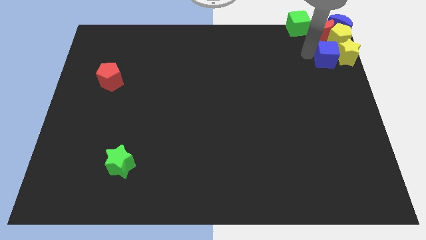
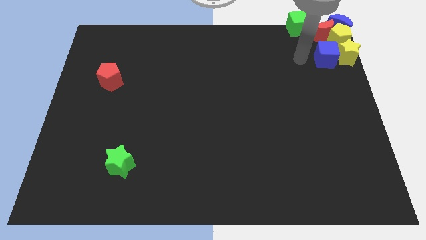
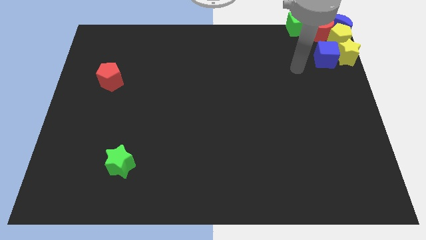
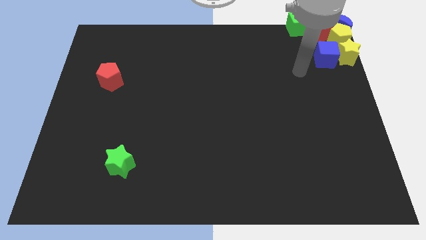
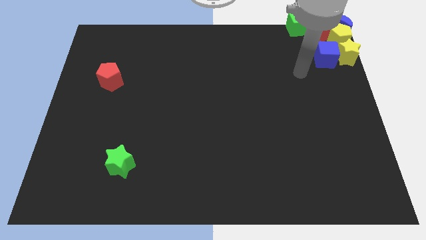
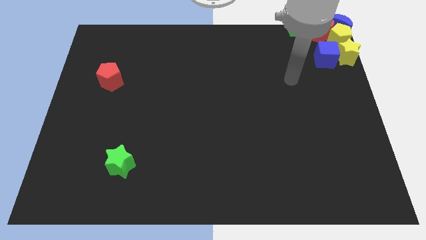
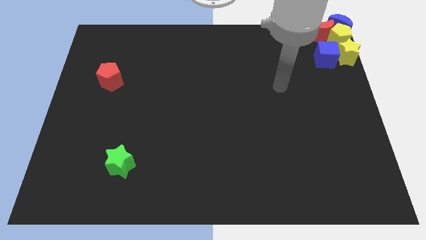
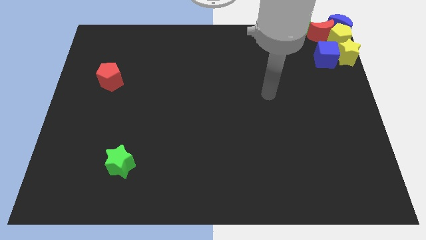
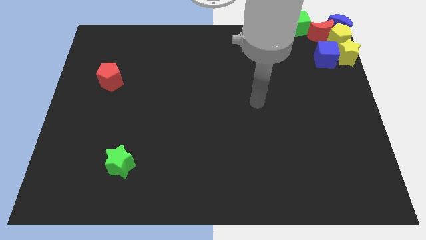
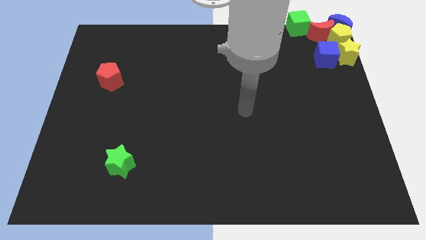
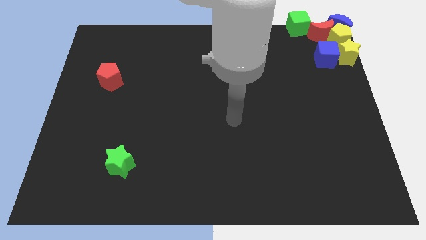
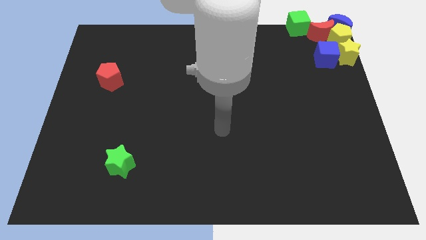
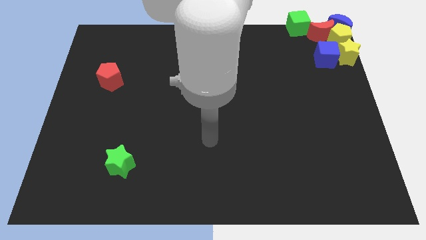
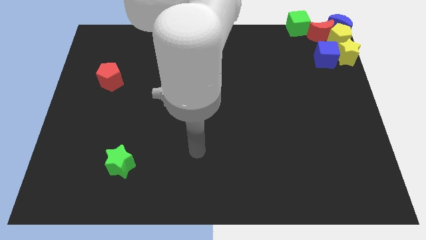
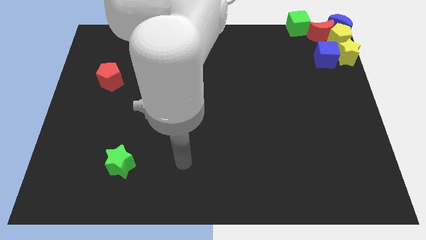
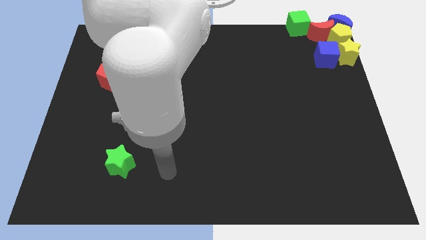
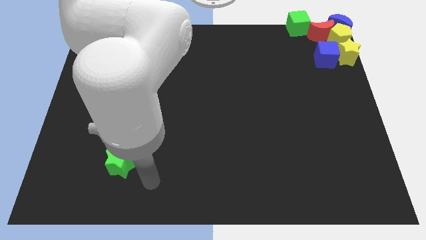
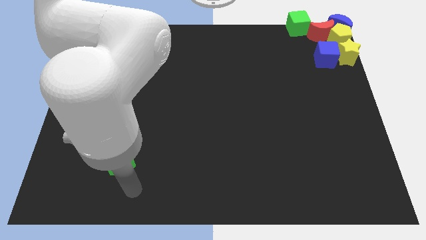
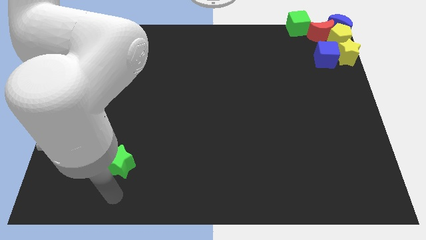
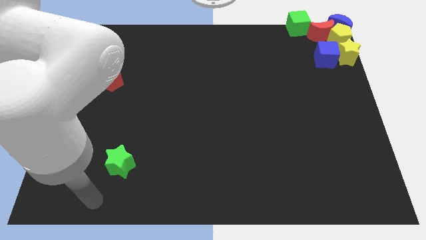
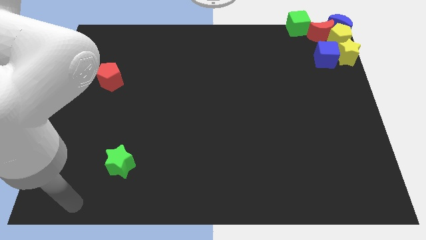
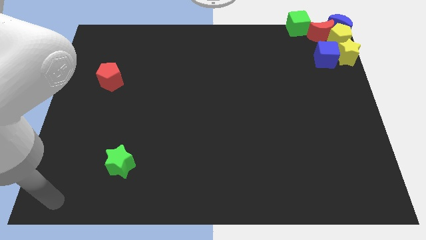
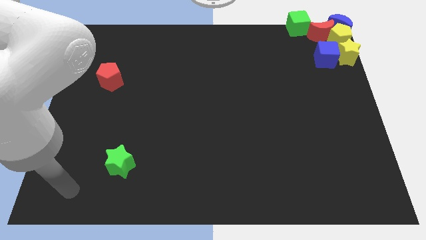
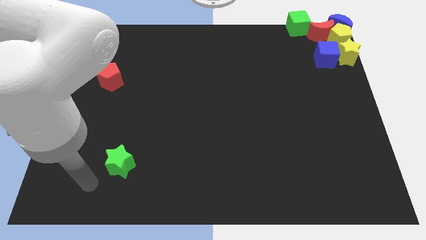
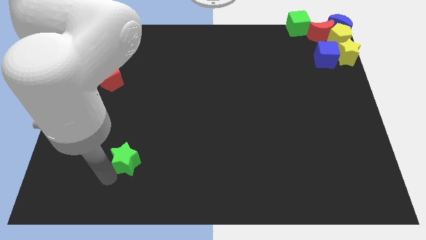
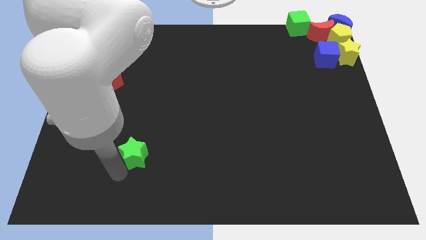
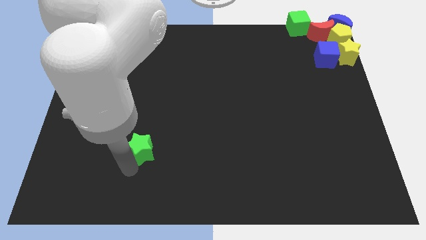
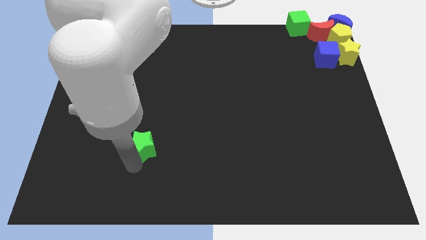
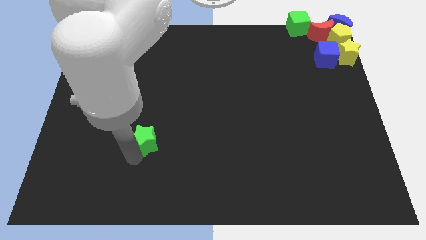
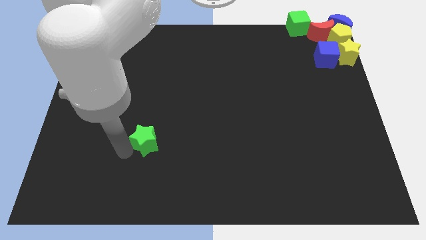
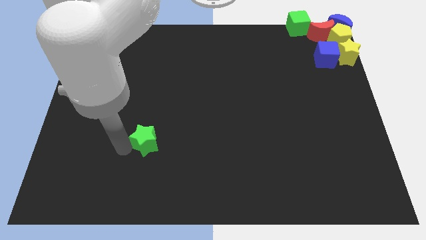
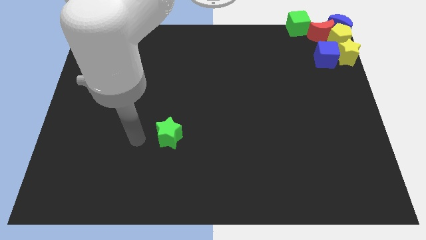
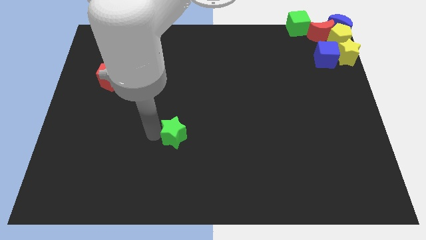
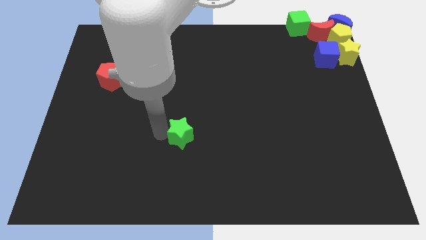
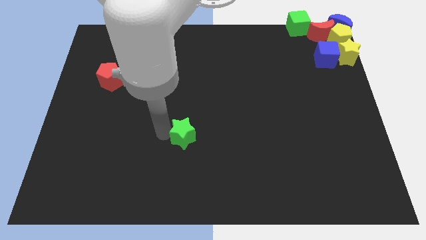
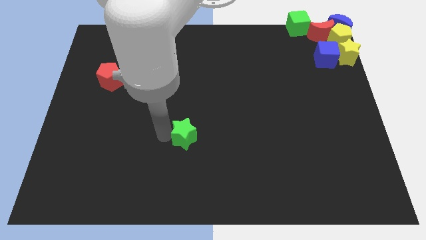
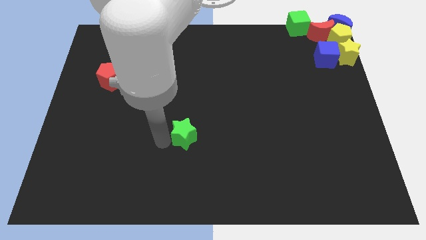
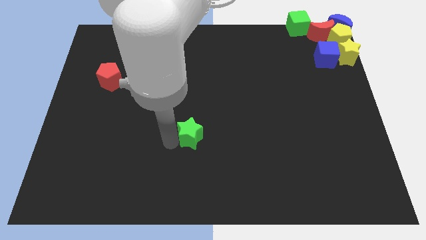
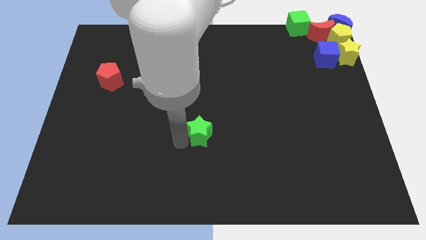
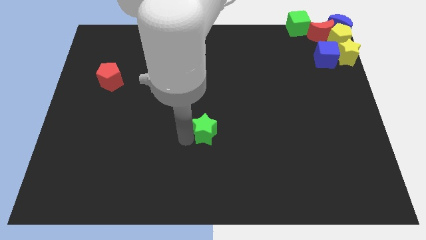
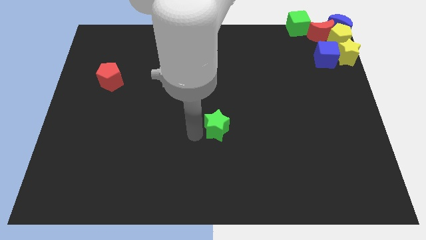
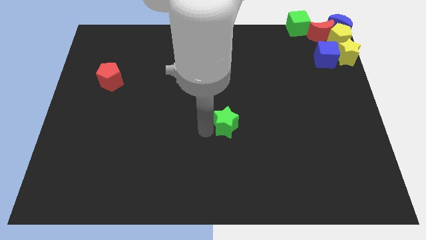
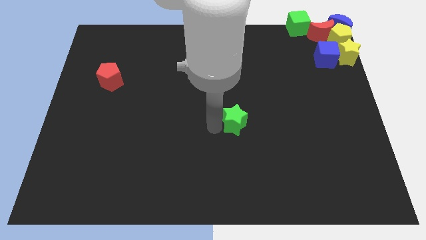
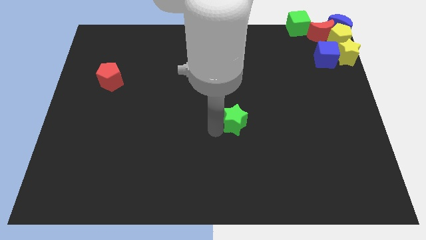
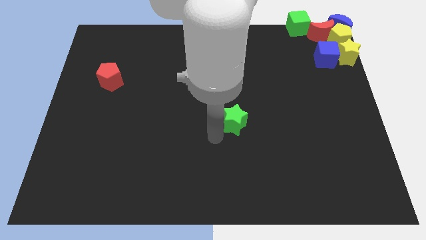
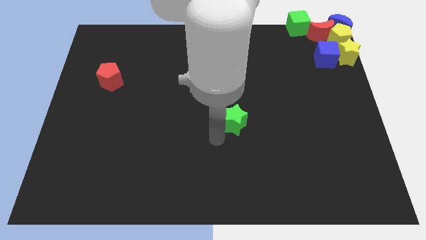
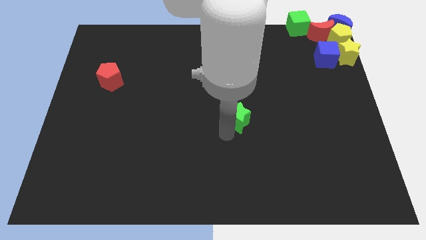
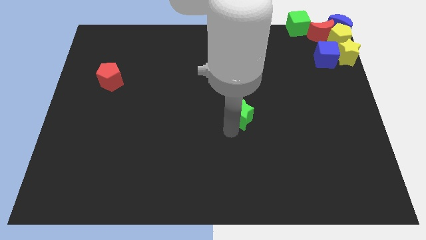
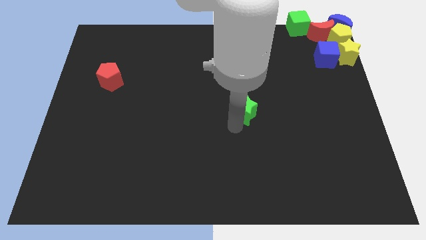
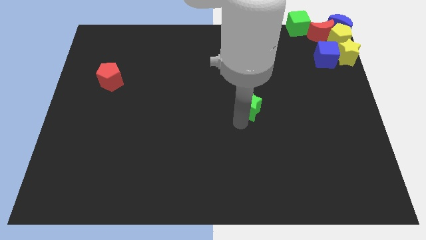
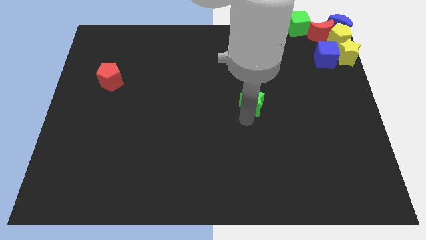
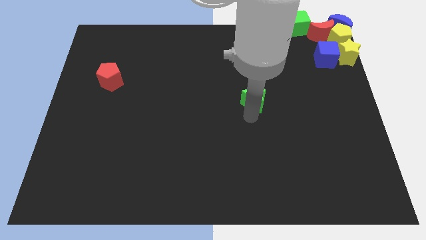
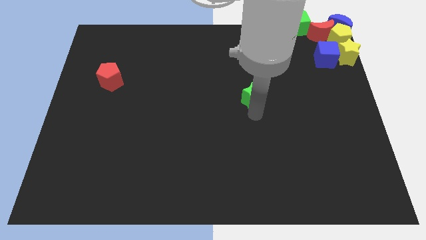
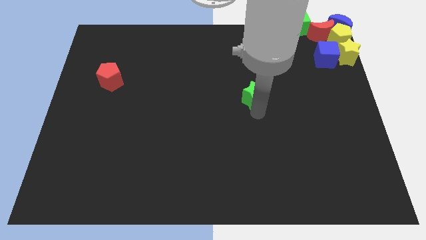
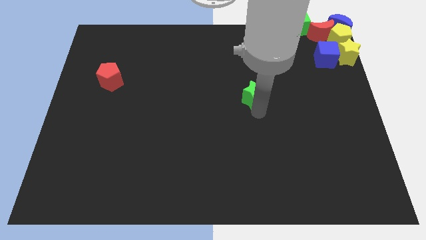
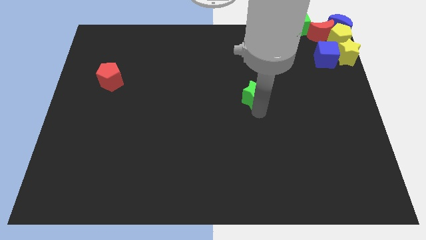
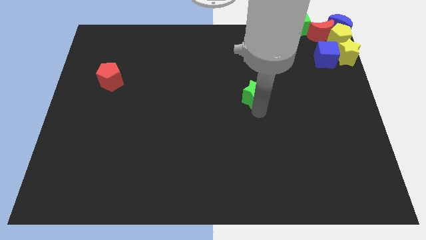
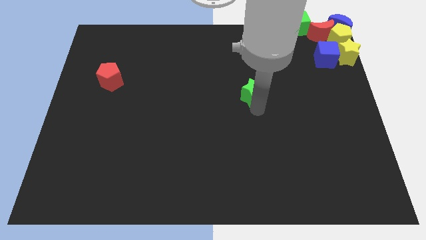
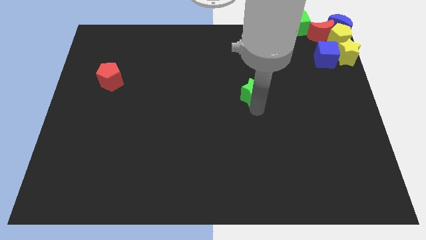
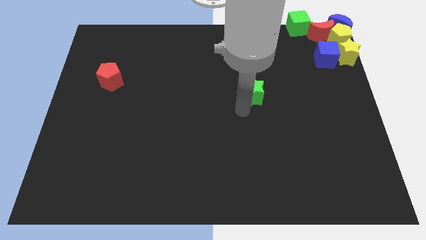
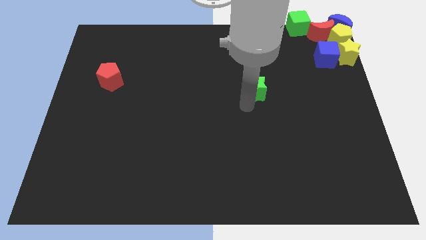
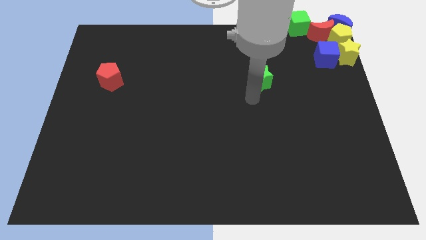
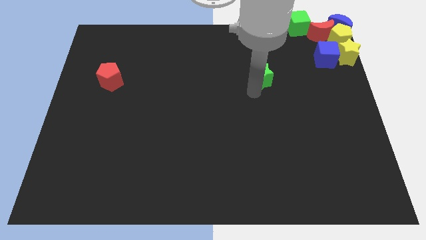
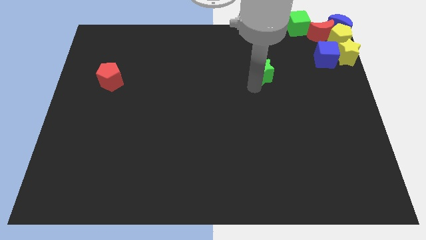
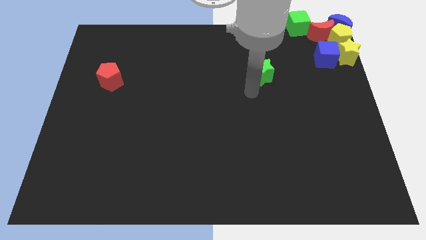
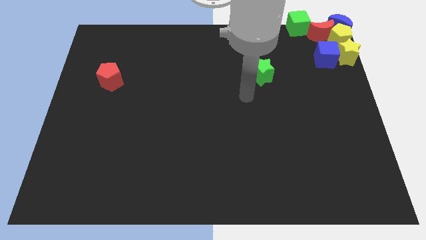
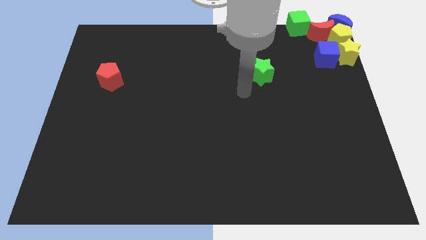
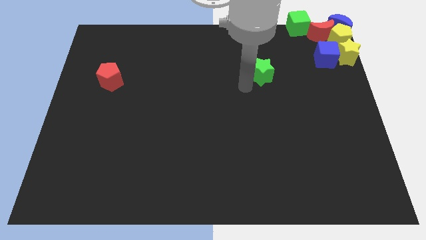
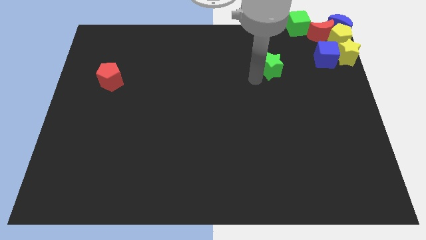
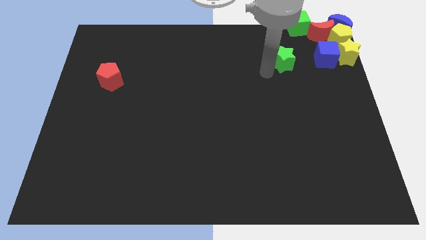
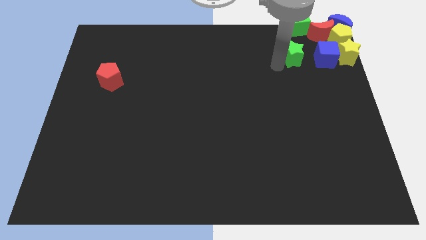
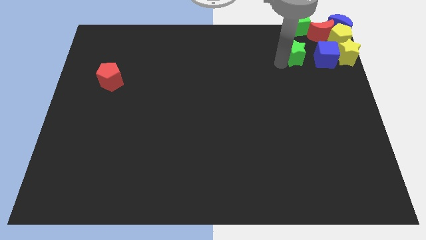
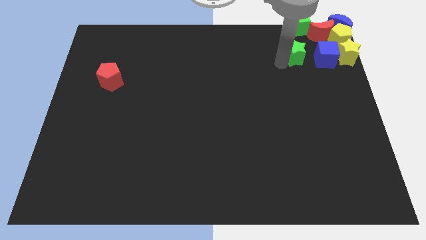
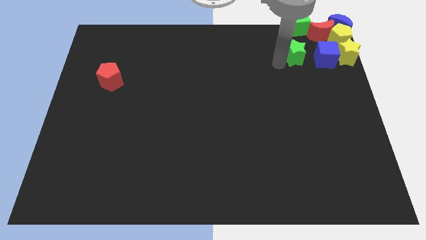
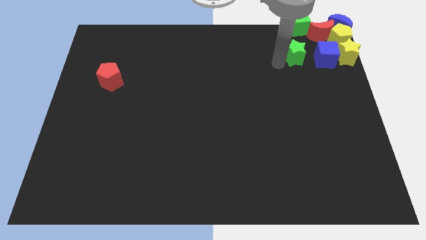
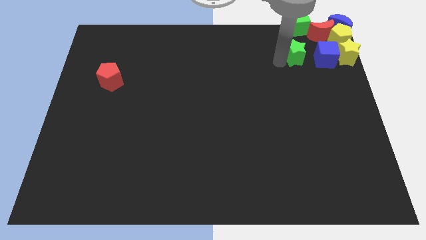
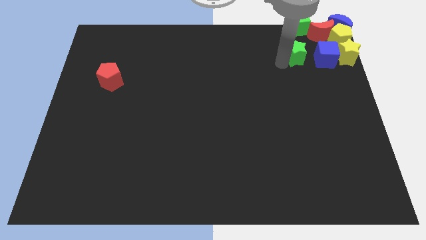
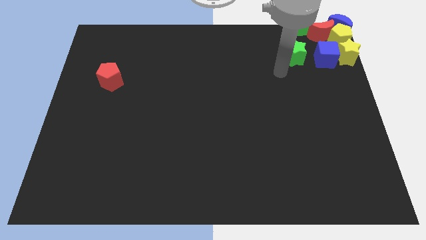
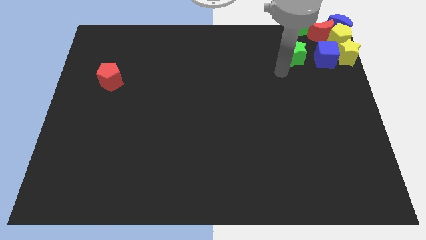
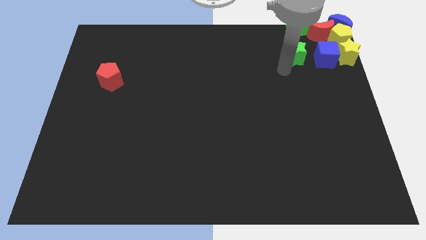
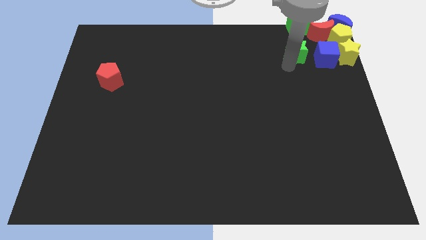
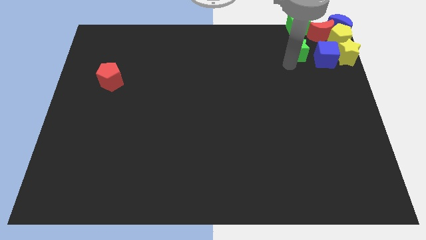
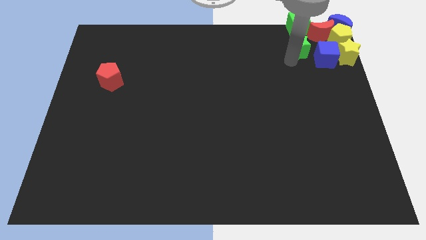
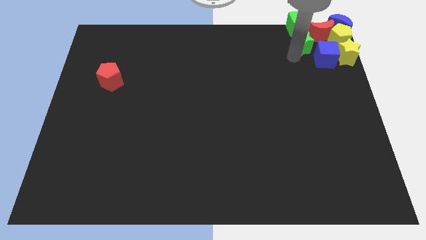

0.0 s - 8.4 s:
push the green star to the top left of blue cube

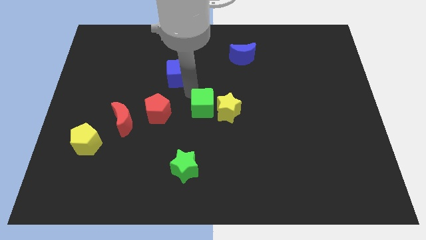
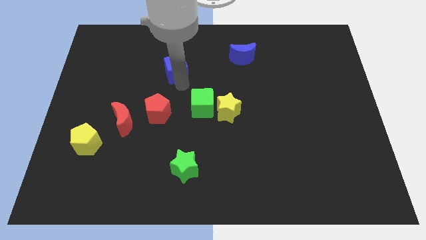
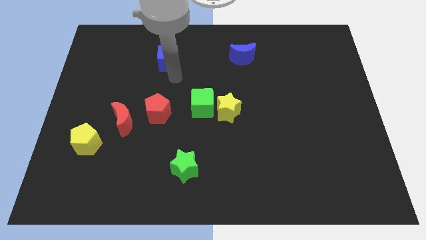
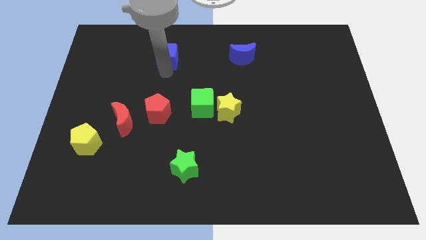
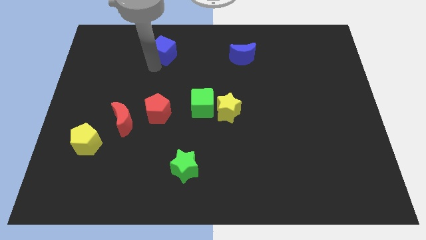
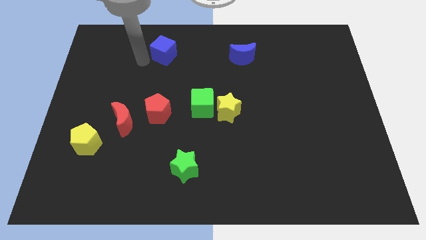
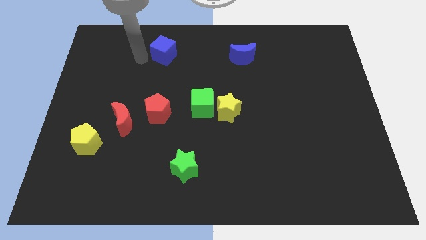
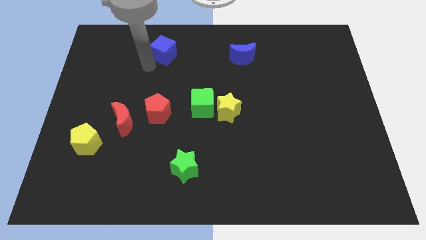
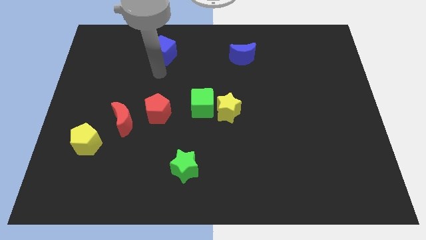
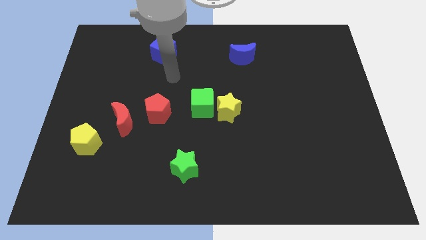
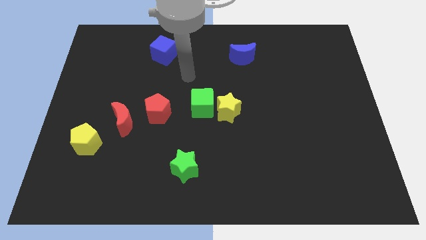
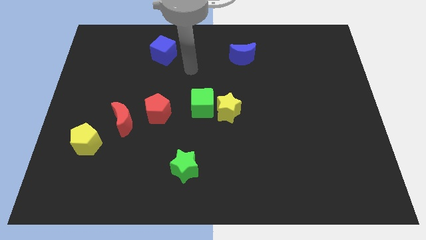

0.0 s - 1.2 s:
place the blue cube to the left of the blue crescent
